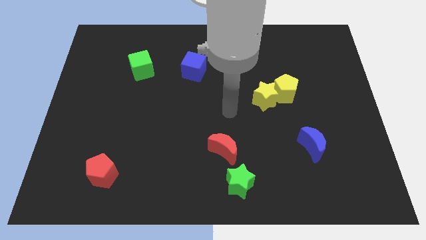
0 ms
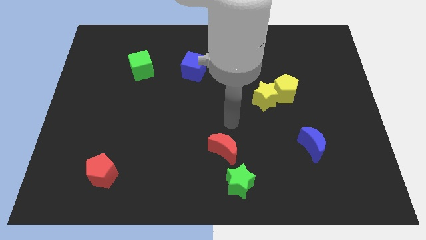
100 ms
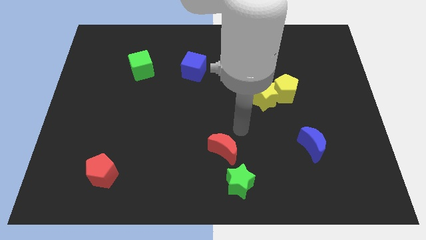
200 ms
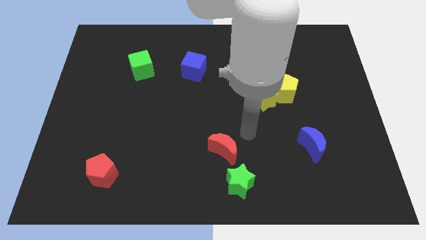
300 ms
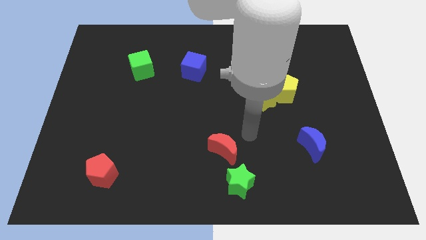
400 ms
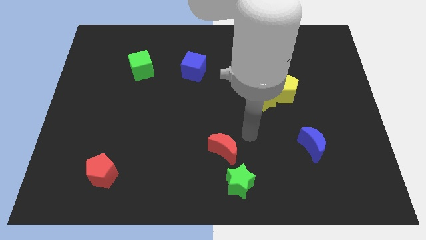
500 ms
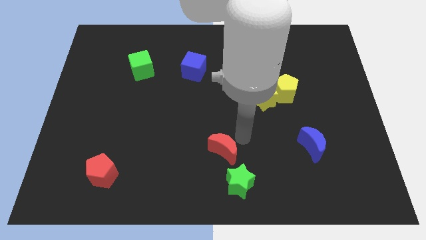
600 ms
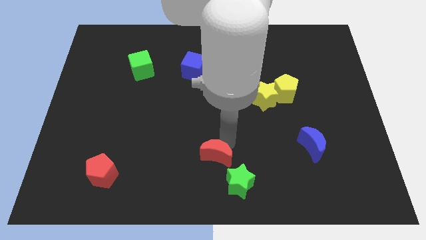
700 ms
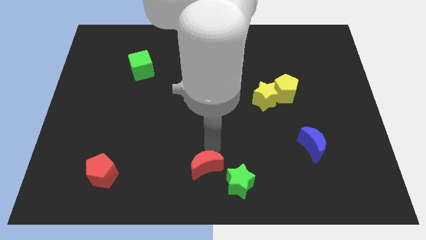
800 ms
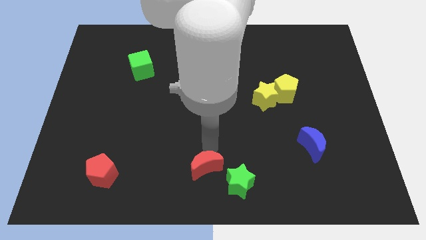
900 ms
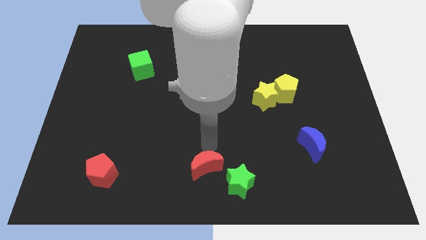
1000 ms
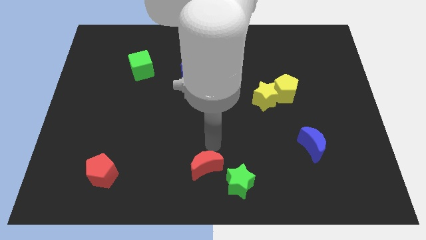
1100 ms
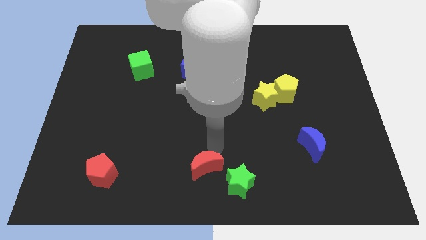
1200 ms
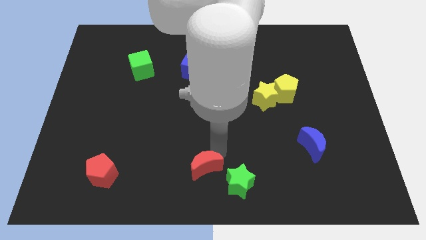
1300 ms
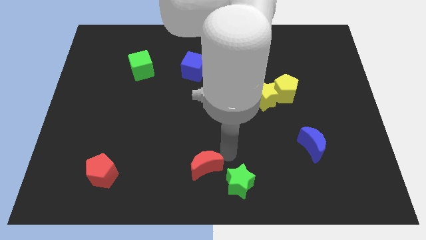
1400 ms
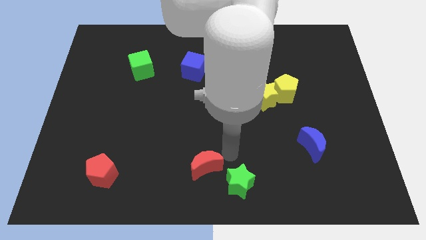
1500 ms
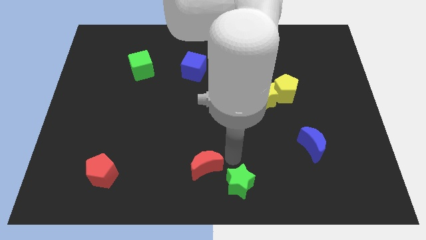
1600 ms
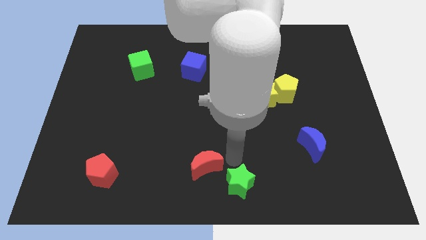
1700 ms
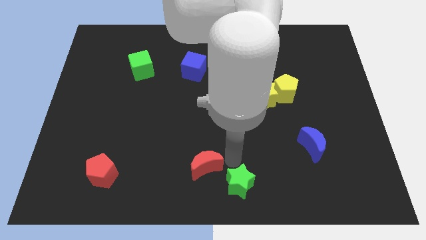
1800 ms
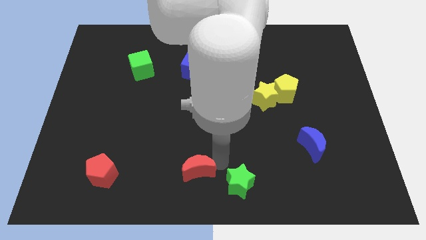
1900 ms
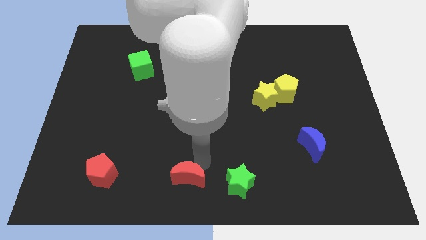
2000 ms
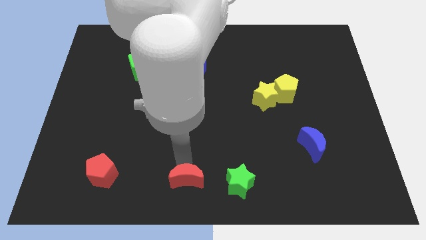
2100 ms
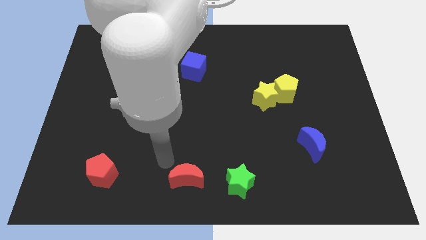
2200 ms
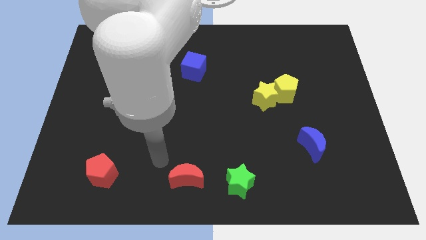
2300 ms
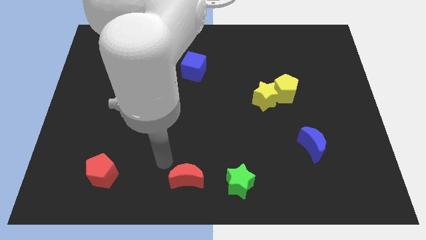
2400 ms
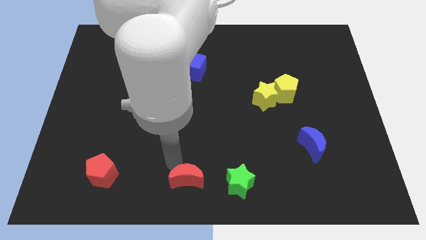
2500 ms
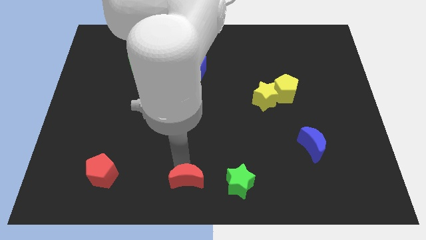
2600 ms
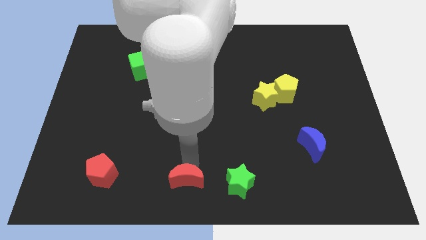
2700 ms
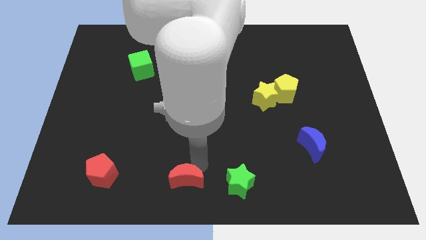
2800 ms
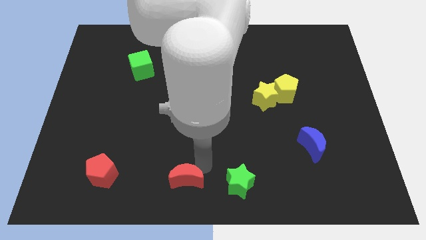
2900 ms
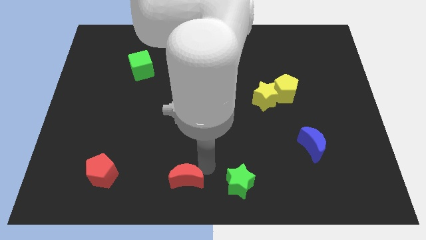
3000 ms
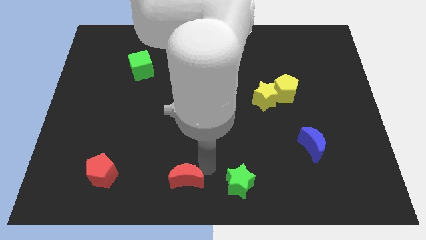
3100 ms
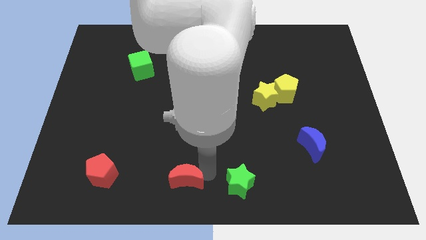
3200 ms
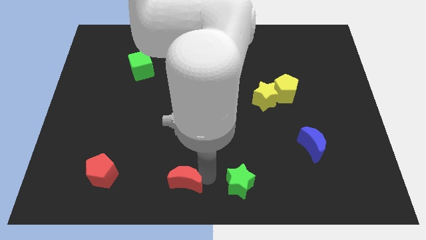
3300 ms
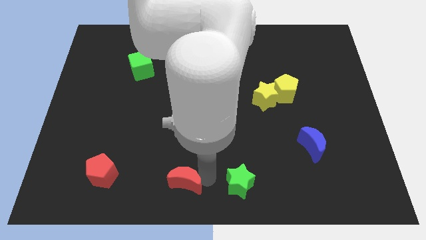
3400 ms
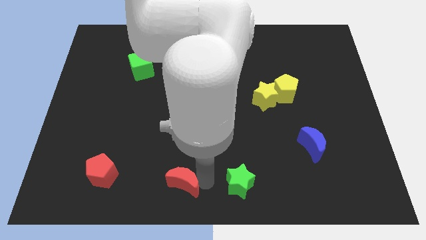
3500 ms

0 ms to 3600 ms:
place the red moon in between the red pentagon and the green star

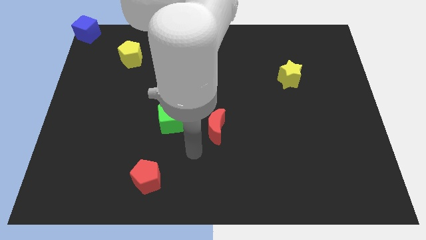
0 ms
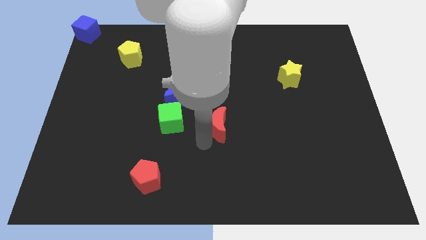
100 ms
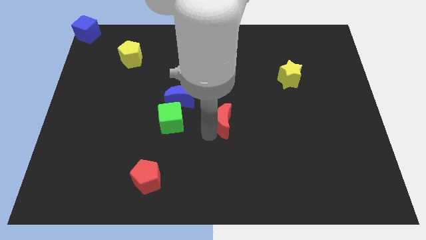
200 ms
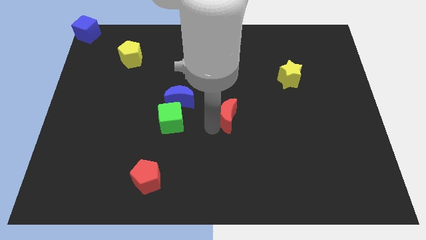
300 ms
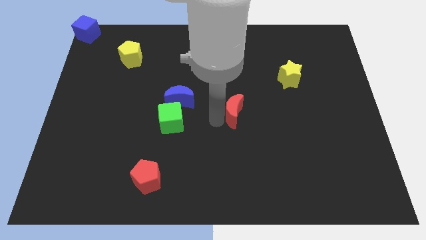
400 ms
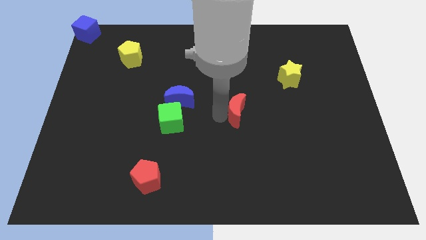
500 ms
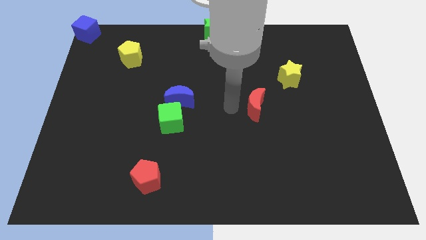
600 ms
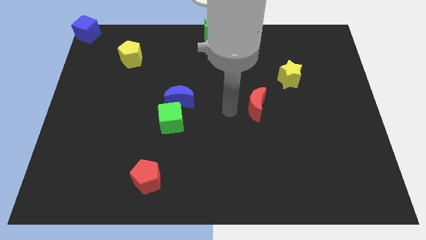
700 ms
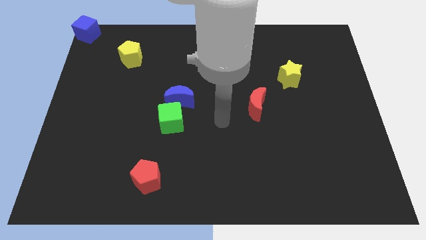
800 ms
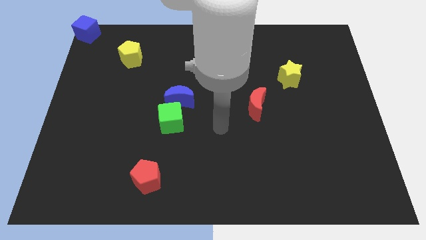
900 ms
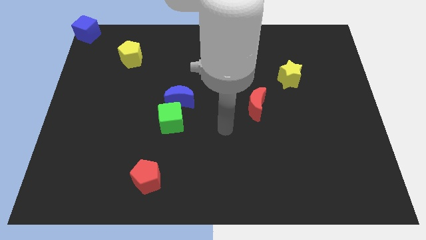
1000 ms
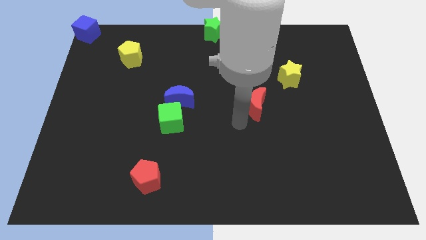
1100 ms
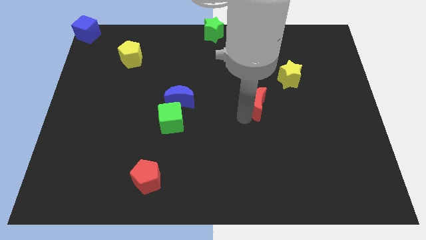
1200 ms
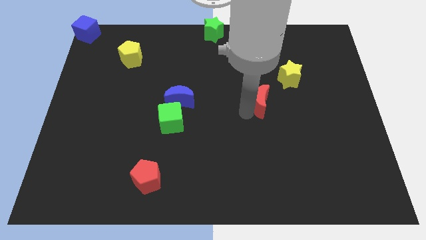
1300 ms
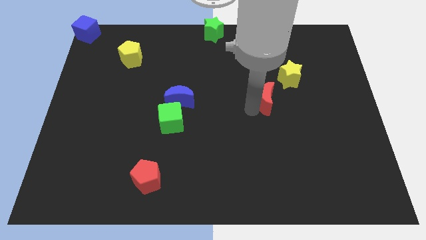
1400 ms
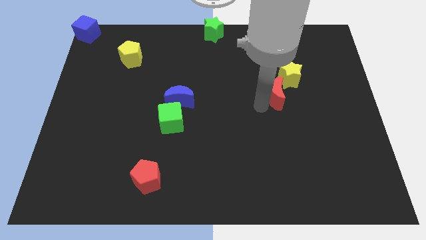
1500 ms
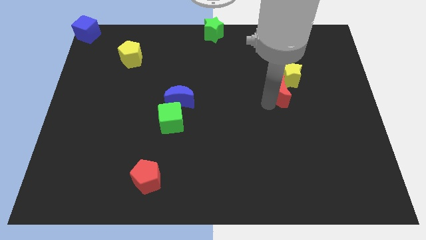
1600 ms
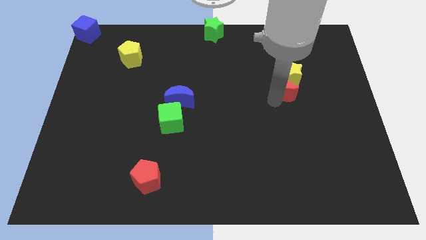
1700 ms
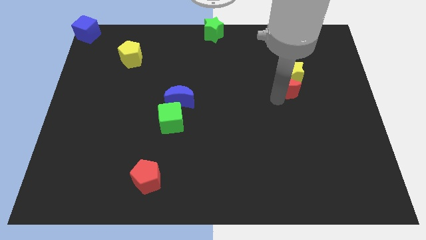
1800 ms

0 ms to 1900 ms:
push the red crescent into yellow star

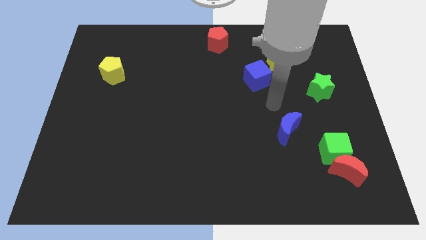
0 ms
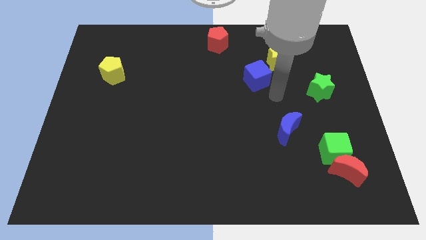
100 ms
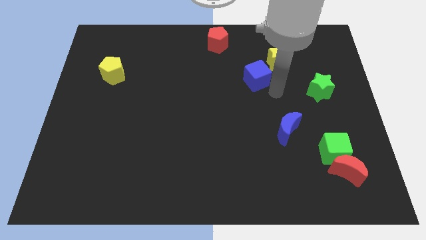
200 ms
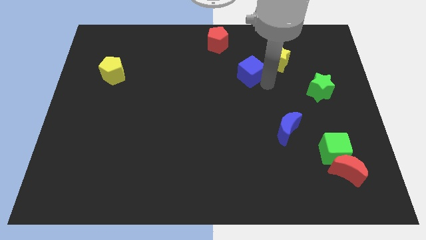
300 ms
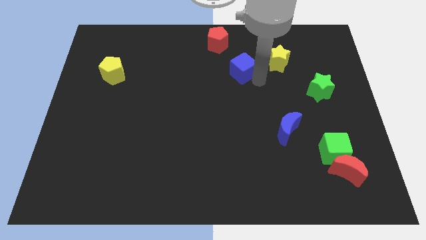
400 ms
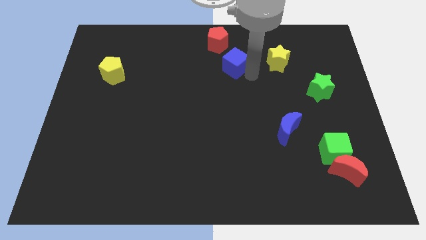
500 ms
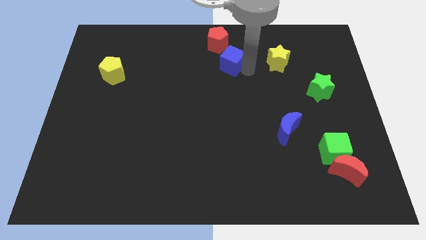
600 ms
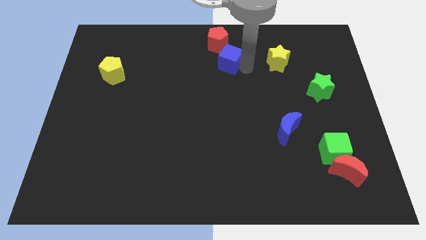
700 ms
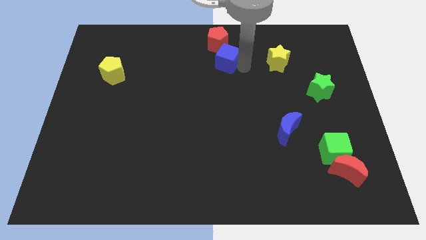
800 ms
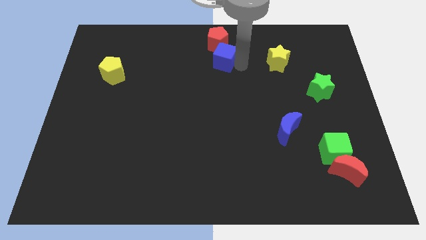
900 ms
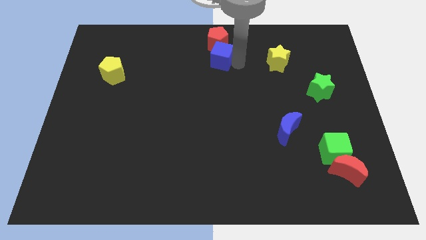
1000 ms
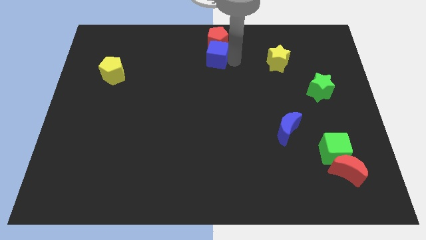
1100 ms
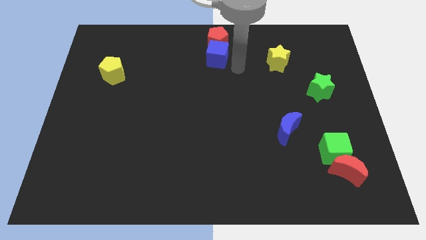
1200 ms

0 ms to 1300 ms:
place blue cube to the bottom of the red pentagon

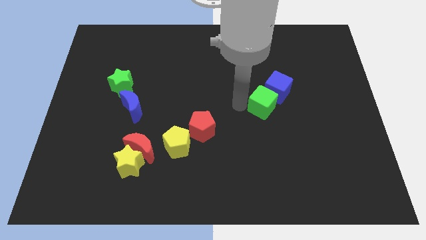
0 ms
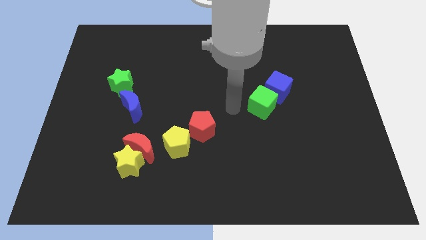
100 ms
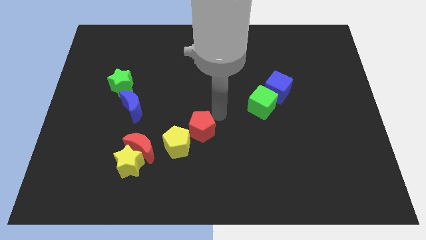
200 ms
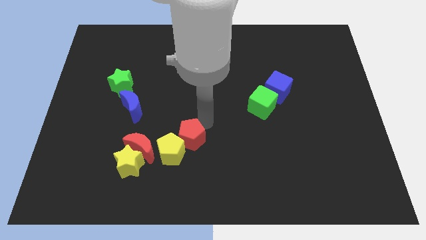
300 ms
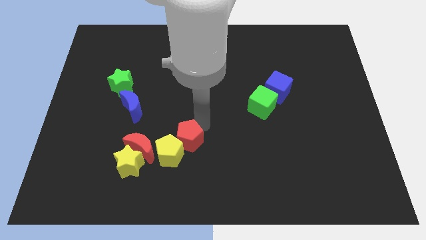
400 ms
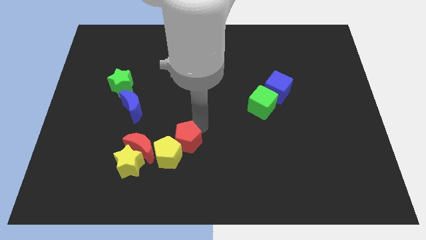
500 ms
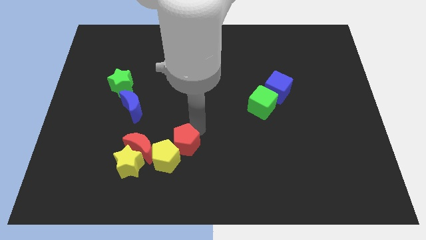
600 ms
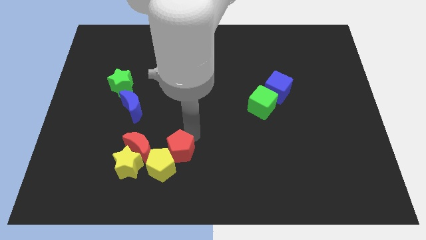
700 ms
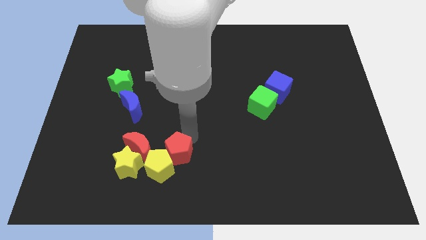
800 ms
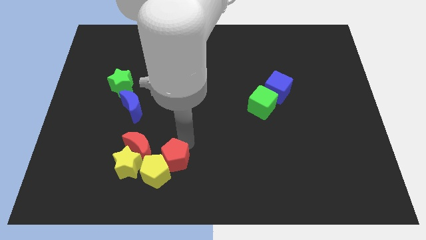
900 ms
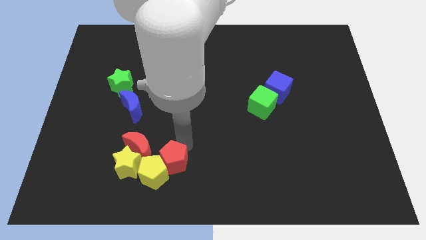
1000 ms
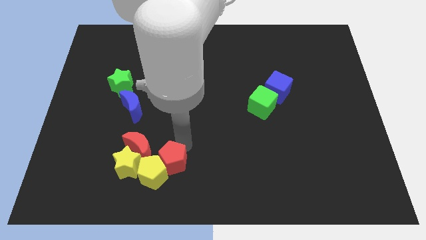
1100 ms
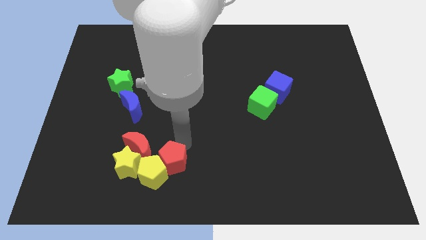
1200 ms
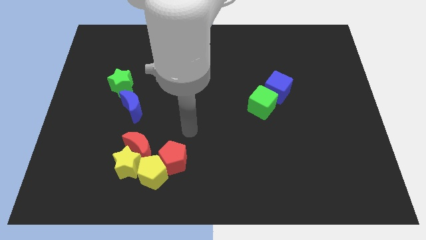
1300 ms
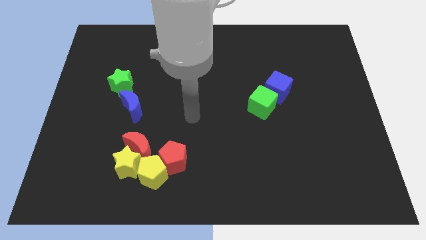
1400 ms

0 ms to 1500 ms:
push the yellow pentagon with the red pentagon

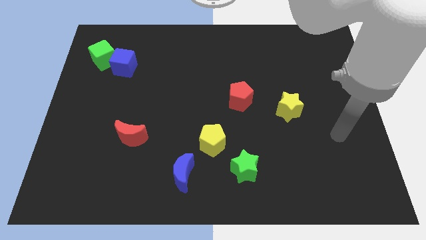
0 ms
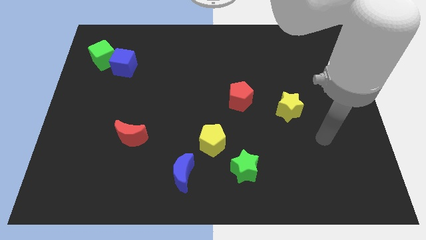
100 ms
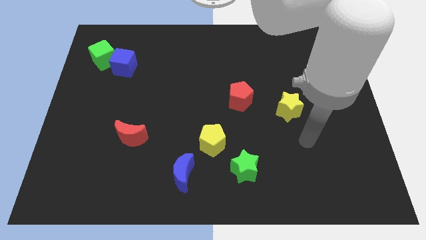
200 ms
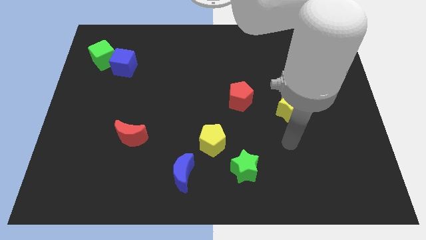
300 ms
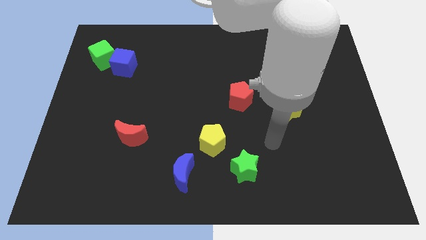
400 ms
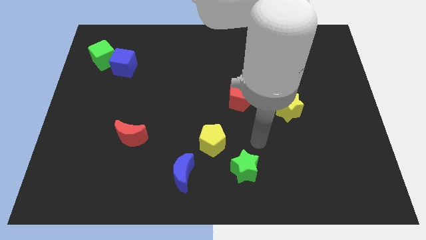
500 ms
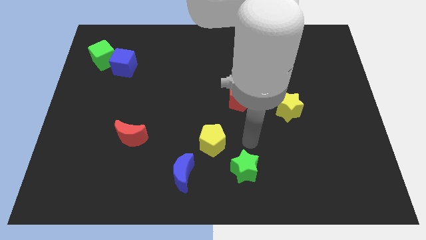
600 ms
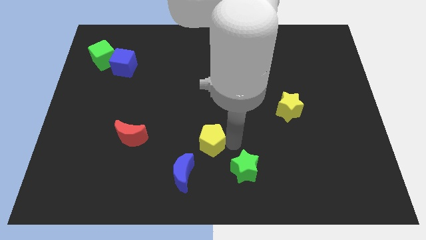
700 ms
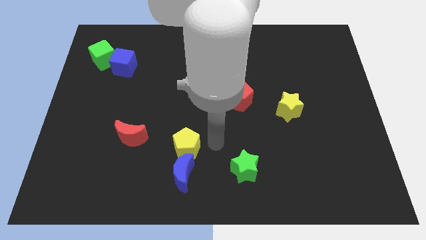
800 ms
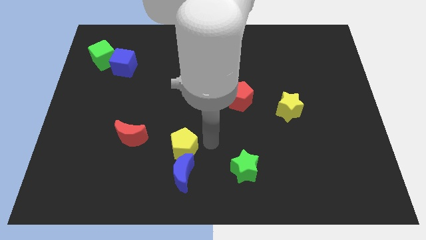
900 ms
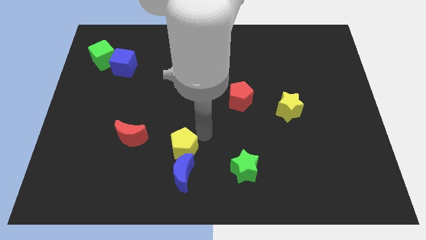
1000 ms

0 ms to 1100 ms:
slide yellow pentagon on top of blue moon
